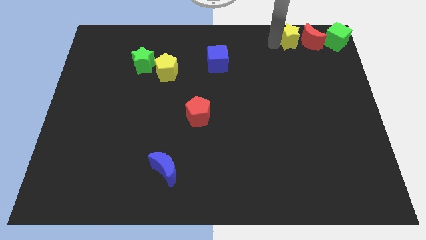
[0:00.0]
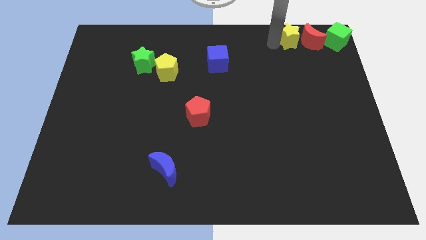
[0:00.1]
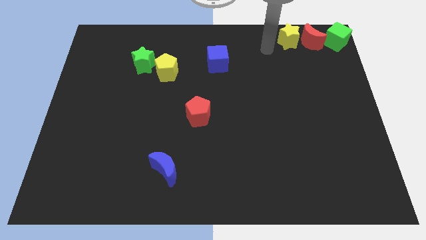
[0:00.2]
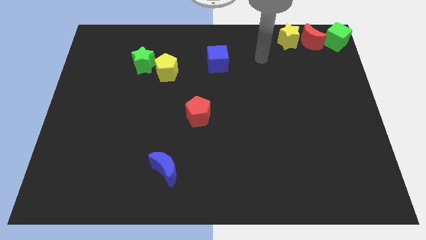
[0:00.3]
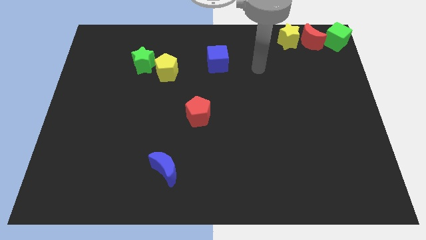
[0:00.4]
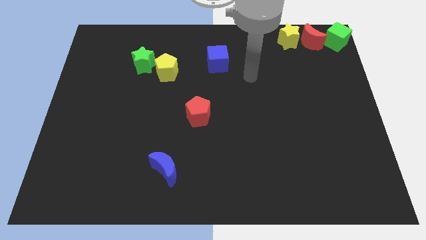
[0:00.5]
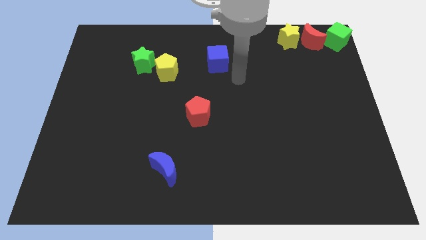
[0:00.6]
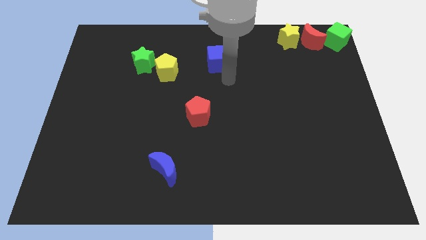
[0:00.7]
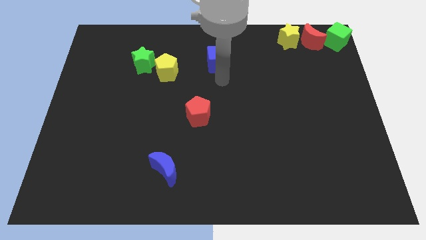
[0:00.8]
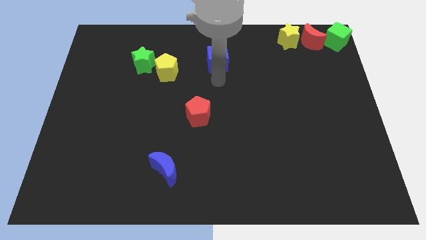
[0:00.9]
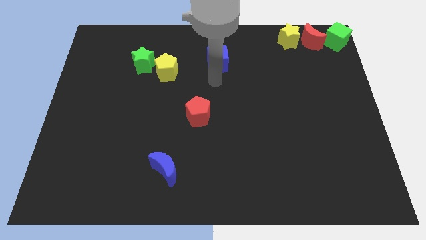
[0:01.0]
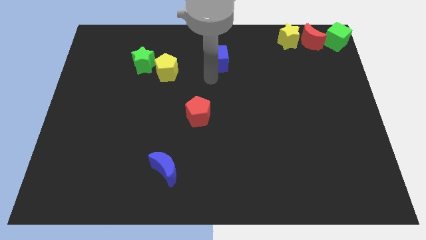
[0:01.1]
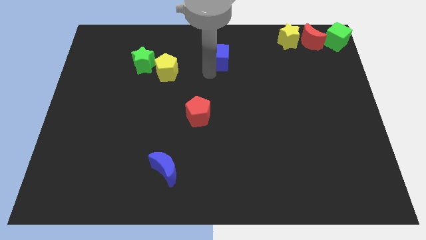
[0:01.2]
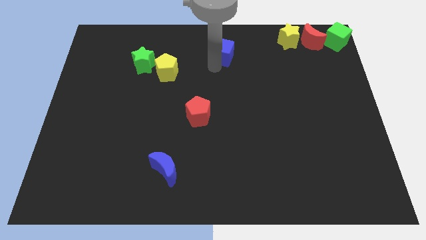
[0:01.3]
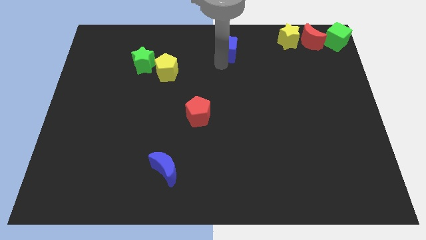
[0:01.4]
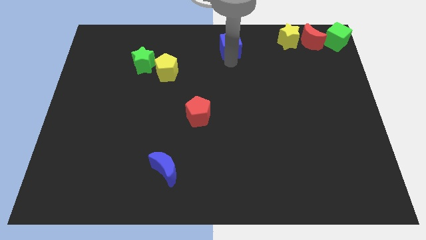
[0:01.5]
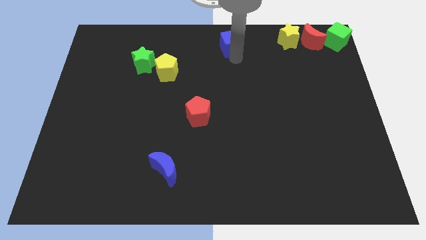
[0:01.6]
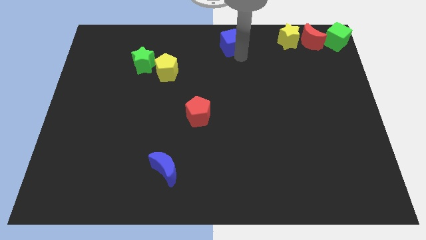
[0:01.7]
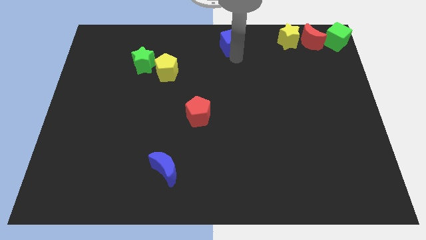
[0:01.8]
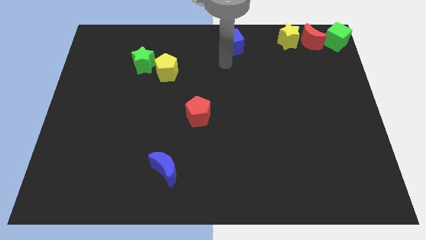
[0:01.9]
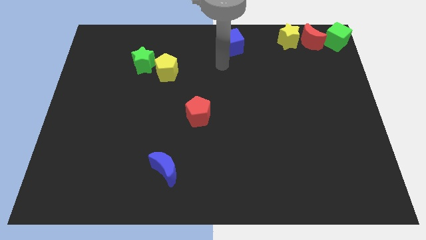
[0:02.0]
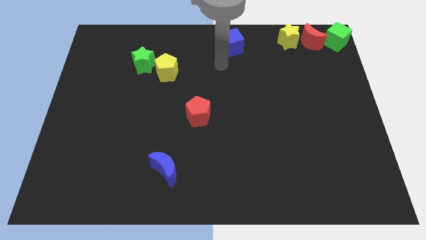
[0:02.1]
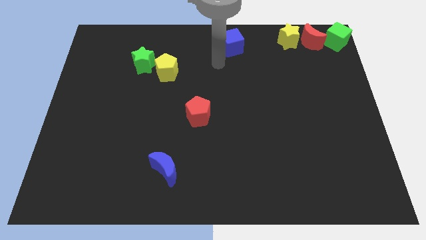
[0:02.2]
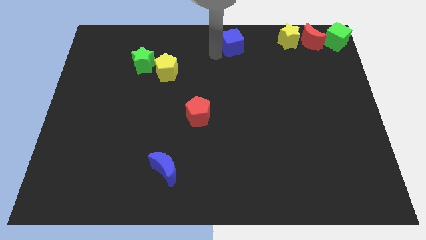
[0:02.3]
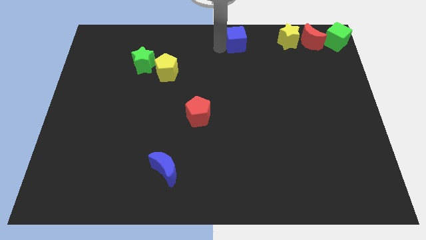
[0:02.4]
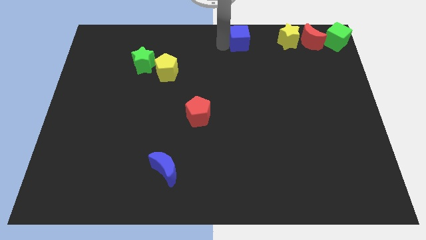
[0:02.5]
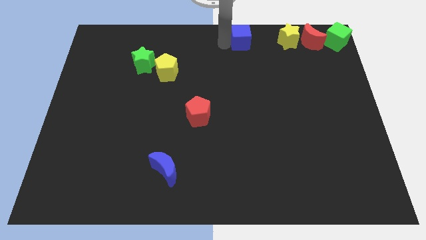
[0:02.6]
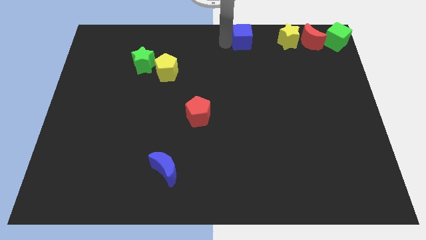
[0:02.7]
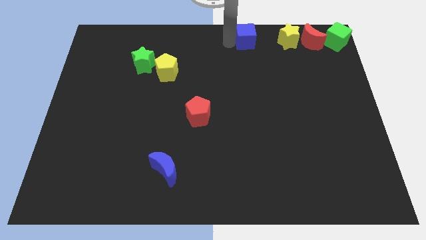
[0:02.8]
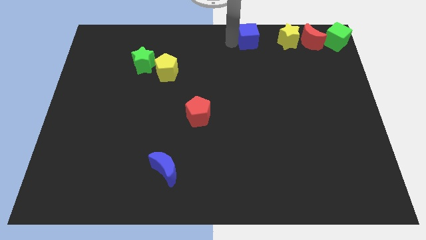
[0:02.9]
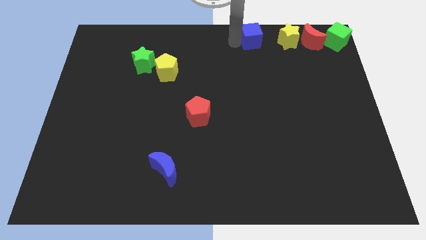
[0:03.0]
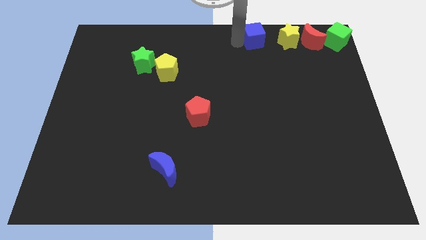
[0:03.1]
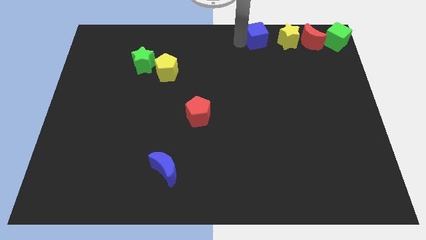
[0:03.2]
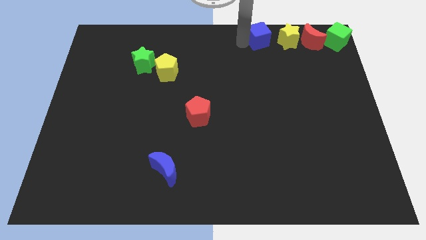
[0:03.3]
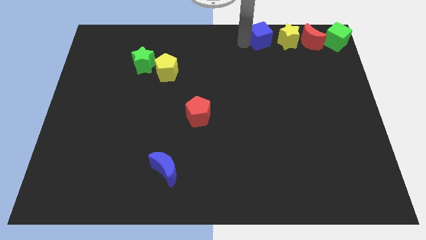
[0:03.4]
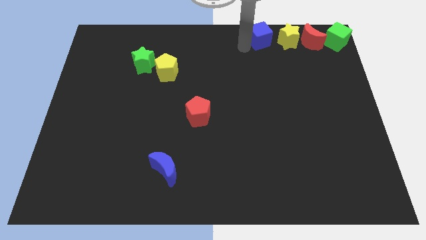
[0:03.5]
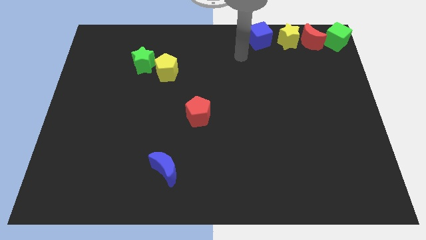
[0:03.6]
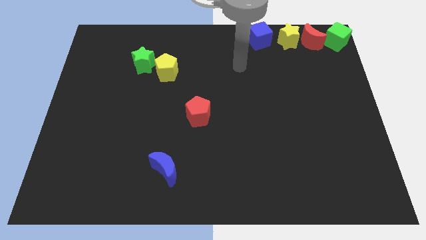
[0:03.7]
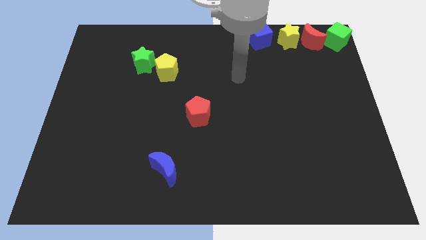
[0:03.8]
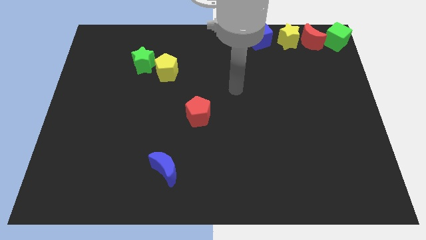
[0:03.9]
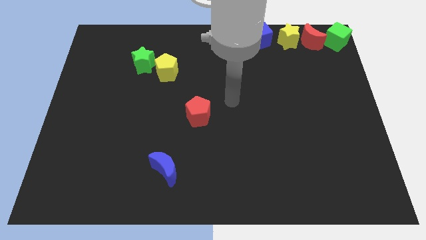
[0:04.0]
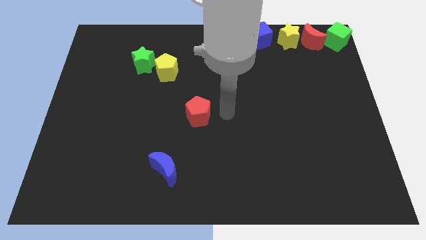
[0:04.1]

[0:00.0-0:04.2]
slide the blue cube parallel left of the yellow star

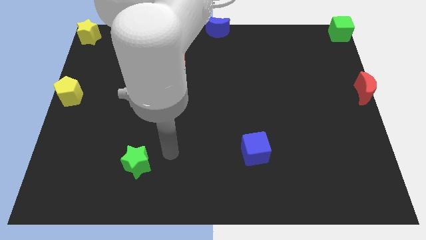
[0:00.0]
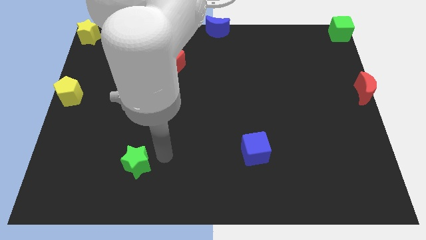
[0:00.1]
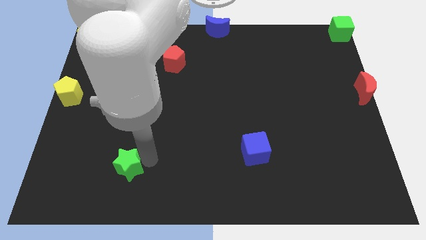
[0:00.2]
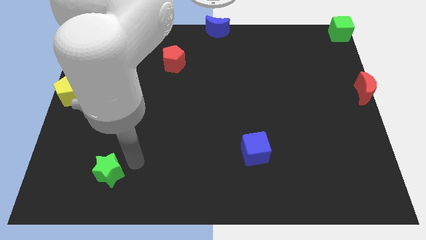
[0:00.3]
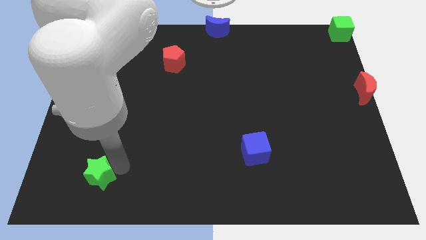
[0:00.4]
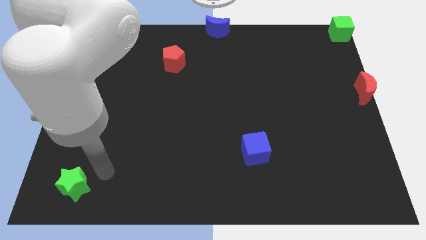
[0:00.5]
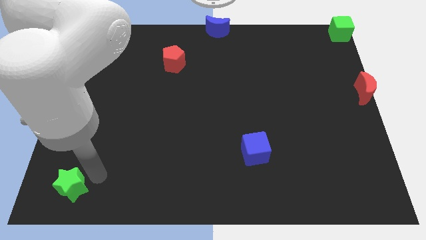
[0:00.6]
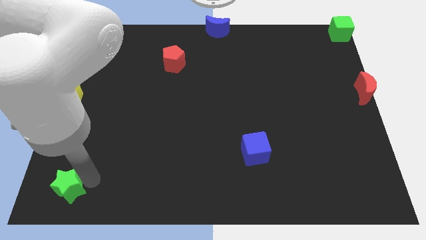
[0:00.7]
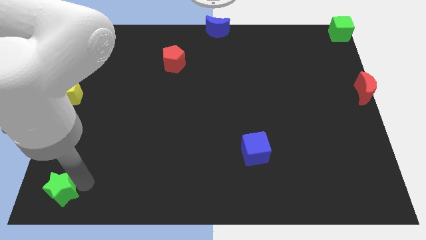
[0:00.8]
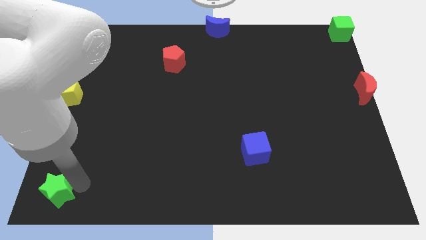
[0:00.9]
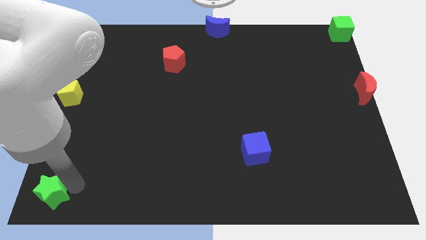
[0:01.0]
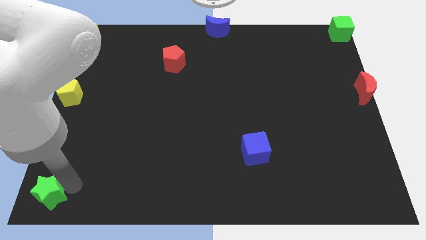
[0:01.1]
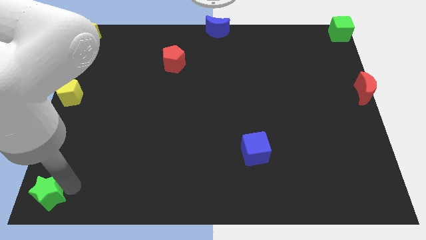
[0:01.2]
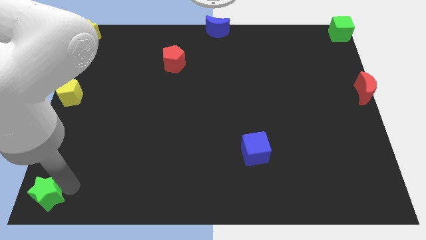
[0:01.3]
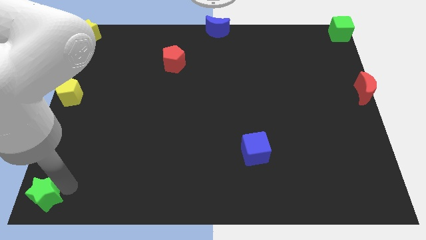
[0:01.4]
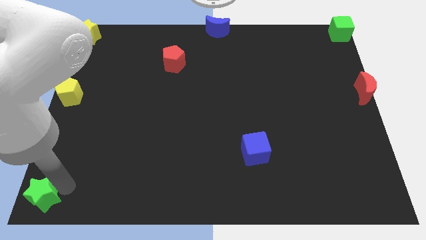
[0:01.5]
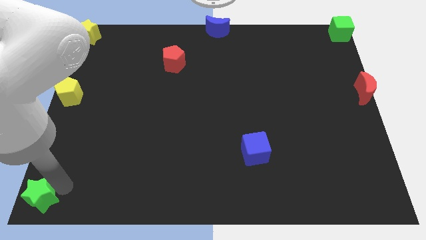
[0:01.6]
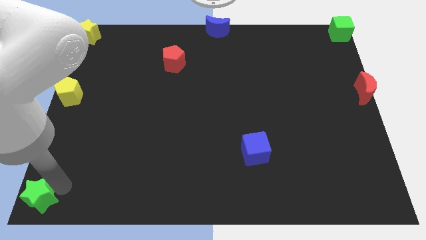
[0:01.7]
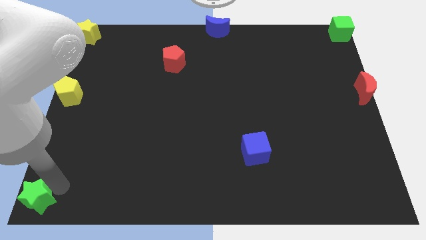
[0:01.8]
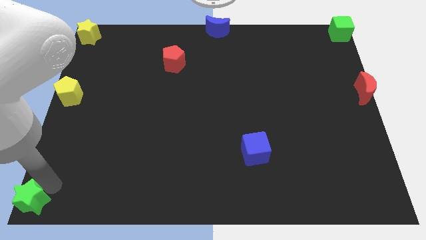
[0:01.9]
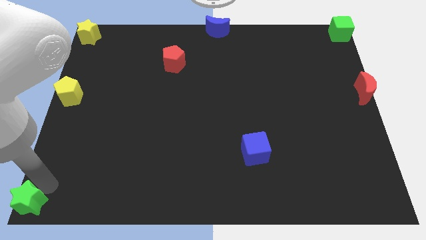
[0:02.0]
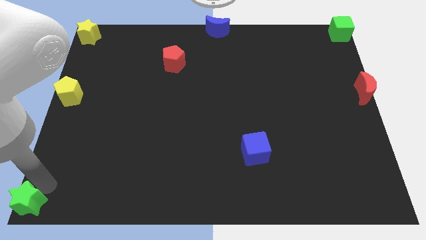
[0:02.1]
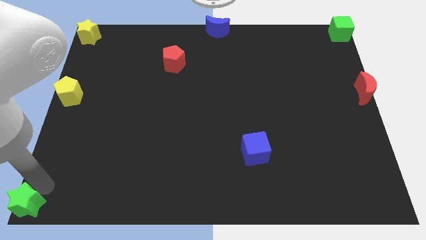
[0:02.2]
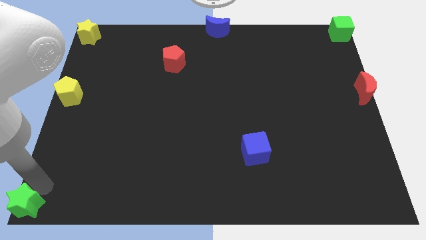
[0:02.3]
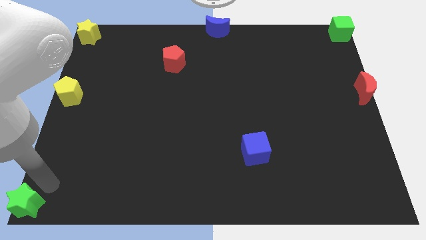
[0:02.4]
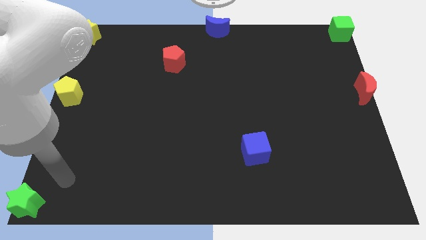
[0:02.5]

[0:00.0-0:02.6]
push the green star to the bottom left corner

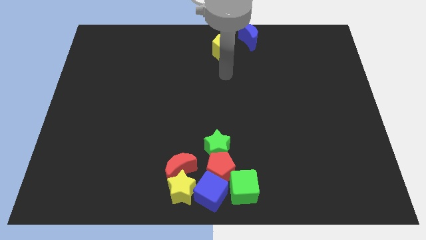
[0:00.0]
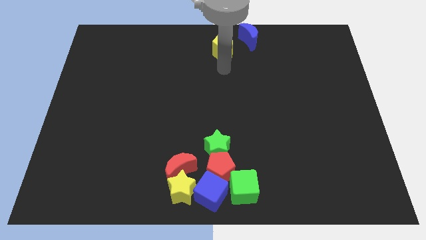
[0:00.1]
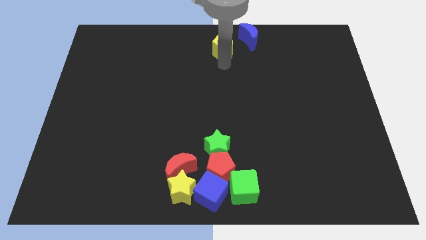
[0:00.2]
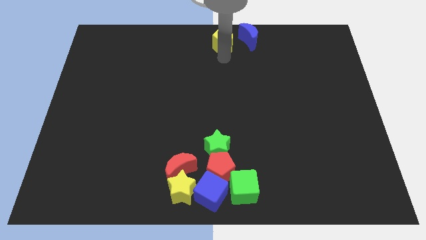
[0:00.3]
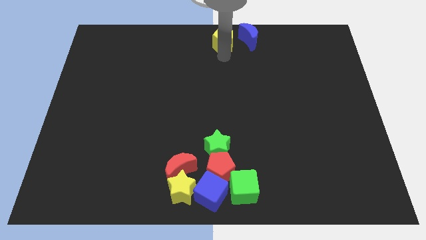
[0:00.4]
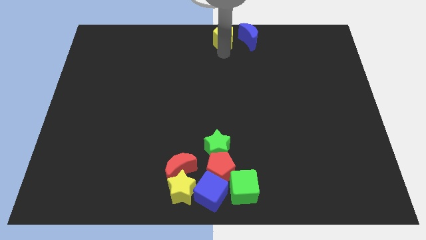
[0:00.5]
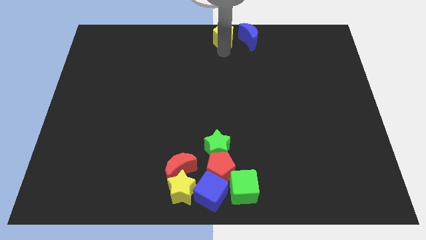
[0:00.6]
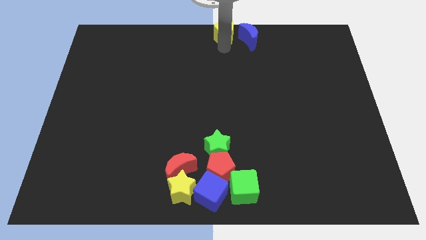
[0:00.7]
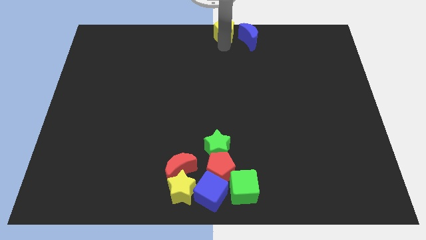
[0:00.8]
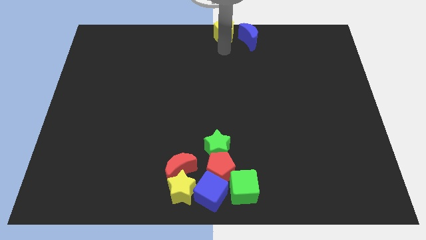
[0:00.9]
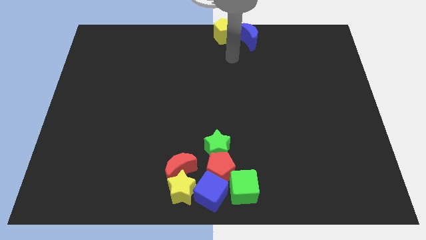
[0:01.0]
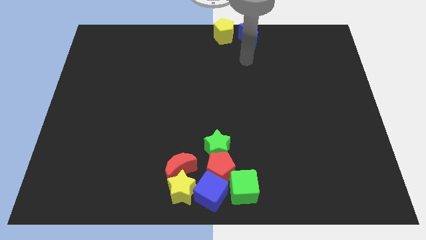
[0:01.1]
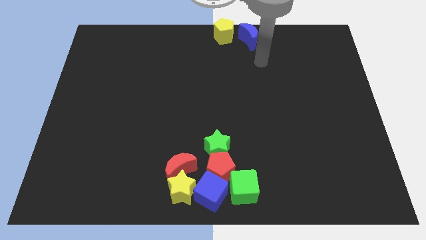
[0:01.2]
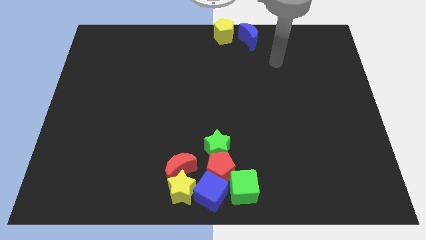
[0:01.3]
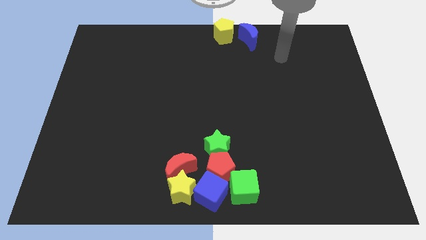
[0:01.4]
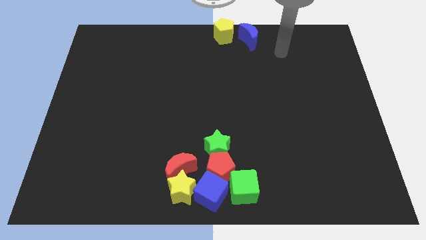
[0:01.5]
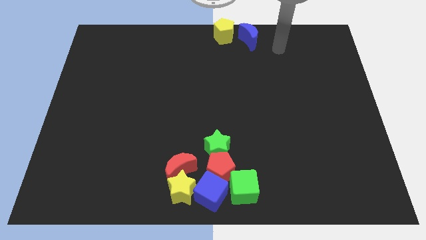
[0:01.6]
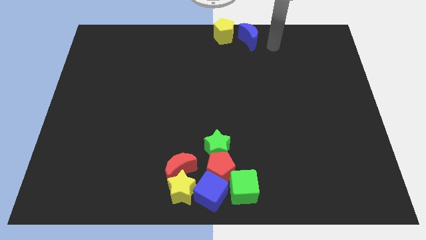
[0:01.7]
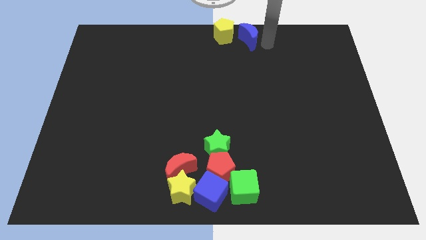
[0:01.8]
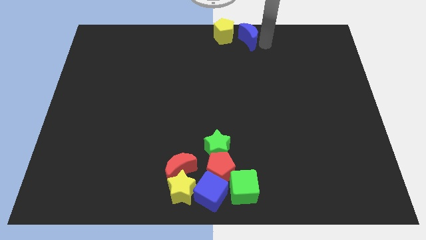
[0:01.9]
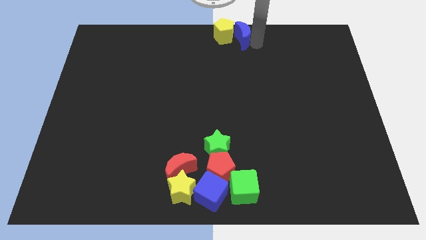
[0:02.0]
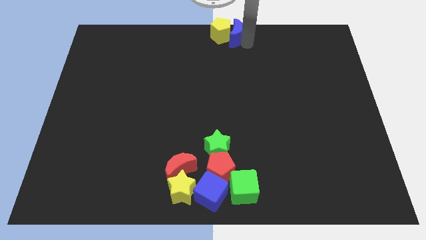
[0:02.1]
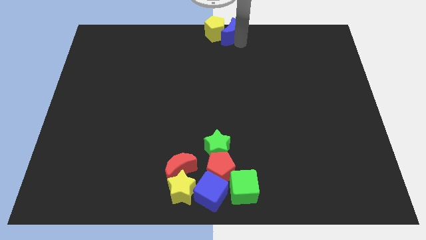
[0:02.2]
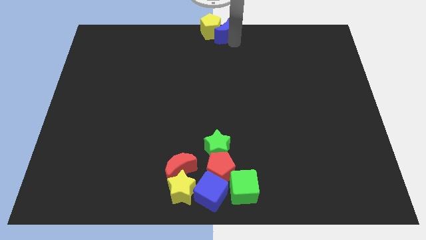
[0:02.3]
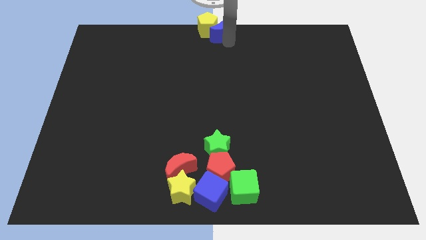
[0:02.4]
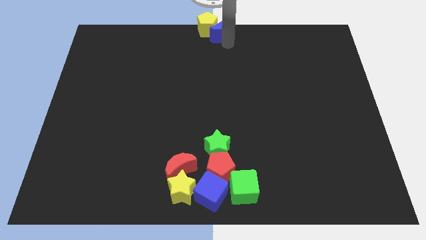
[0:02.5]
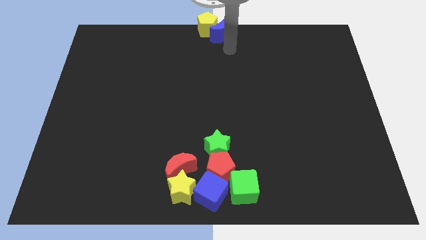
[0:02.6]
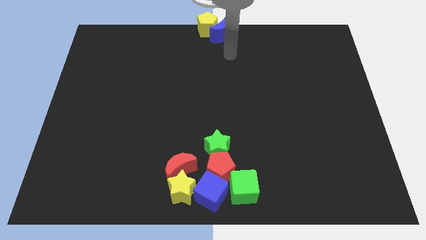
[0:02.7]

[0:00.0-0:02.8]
push the yellow pentagon and blue moon together towards top center
